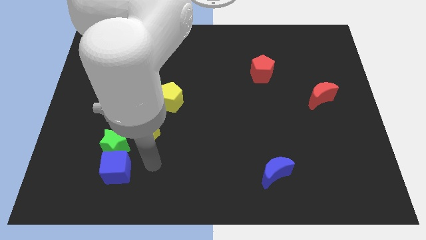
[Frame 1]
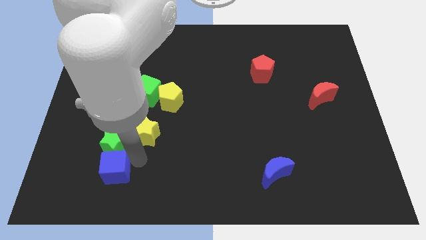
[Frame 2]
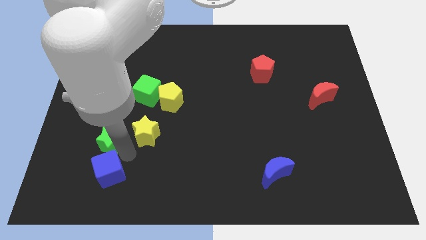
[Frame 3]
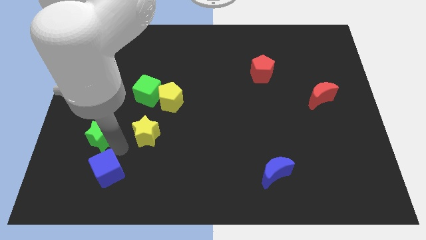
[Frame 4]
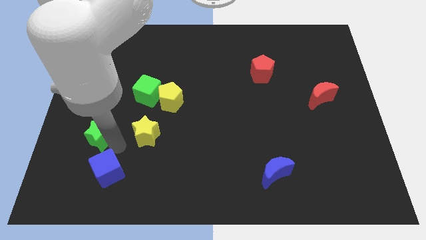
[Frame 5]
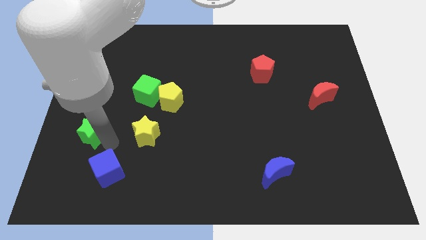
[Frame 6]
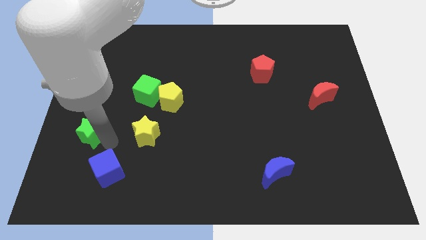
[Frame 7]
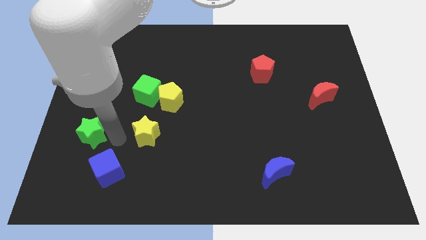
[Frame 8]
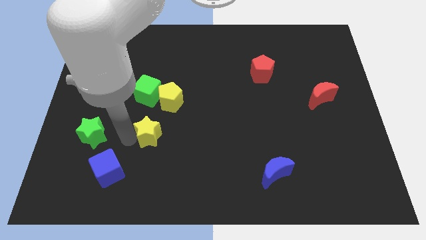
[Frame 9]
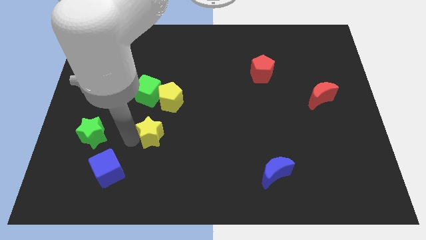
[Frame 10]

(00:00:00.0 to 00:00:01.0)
seperate green star and blue cube

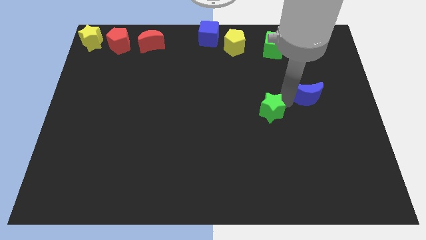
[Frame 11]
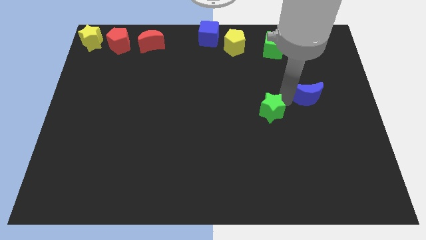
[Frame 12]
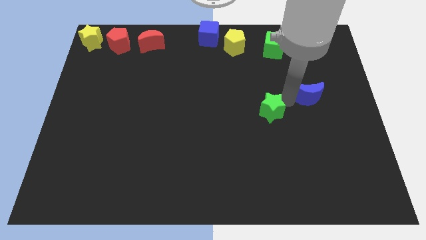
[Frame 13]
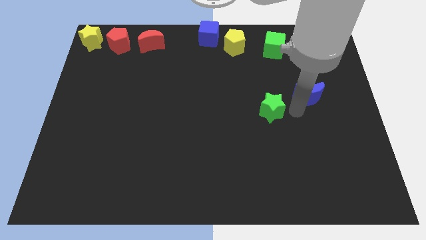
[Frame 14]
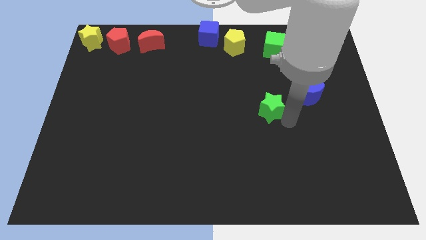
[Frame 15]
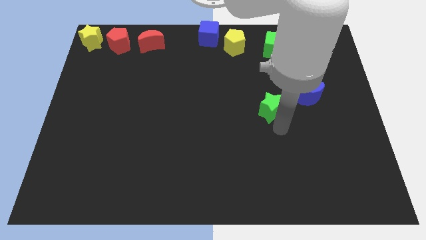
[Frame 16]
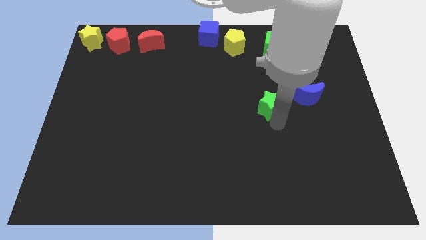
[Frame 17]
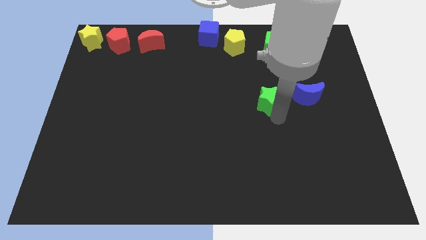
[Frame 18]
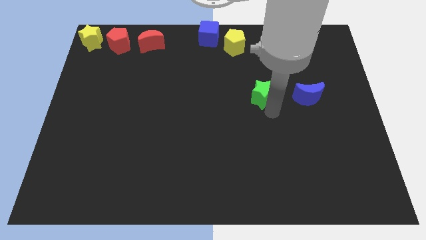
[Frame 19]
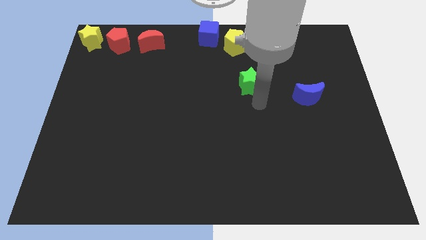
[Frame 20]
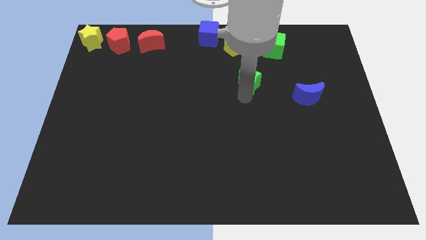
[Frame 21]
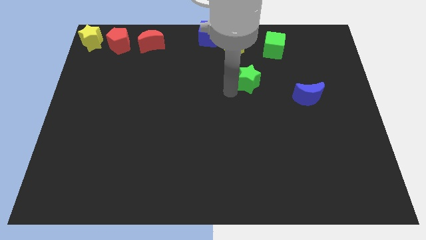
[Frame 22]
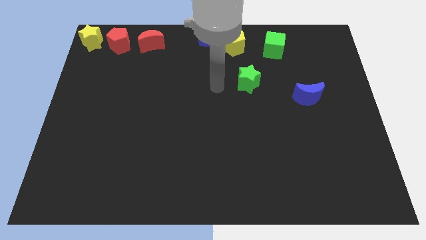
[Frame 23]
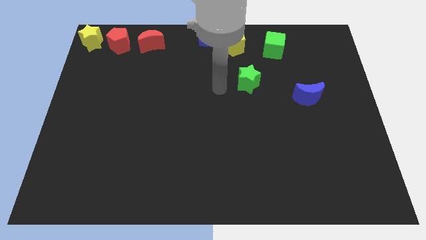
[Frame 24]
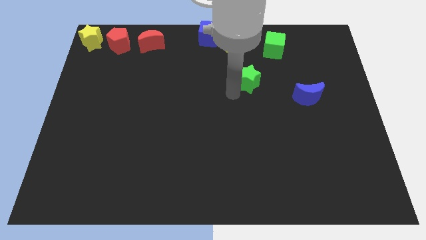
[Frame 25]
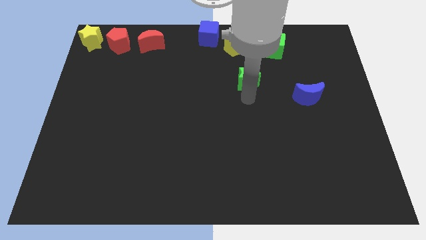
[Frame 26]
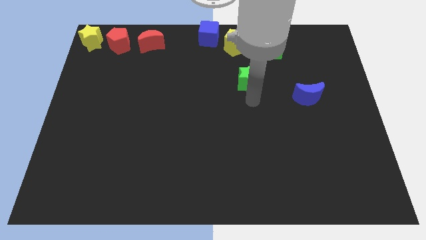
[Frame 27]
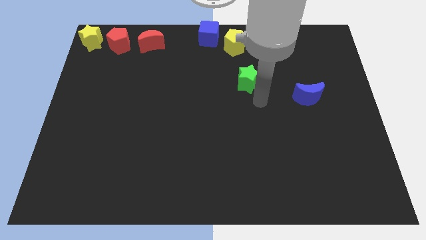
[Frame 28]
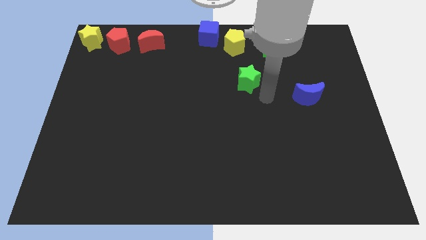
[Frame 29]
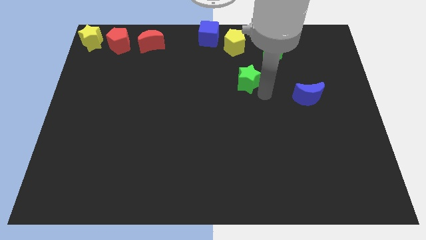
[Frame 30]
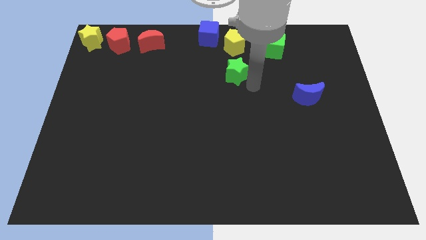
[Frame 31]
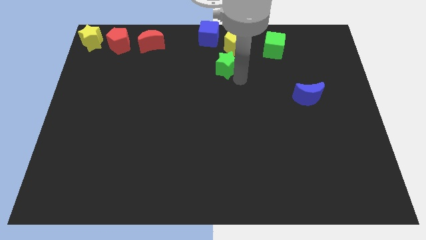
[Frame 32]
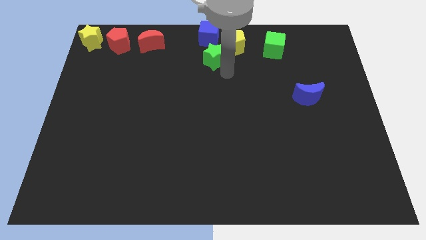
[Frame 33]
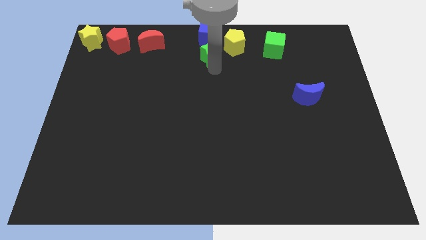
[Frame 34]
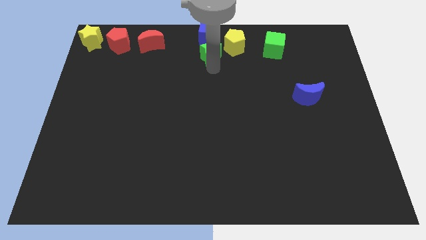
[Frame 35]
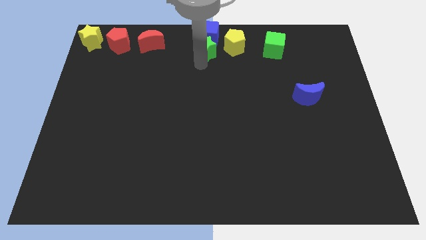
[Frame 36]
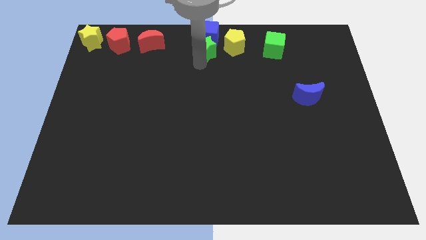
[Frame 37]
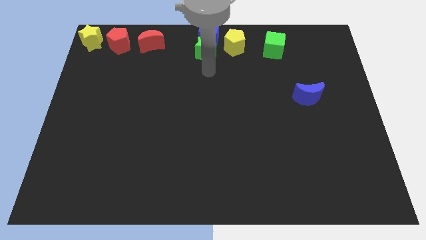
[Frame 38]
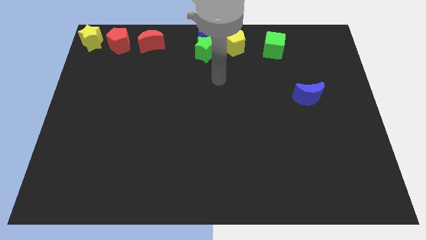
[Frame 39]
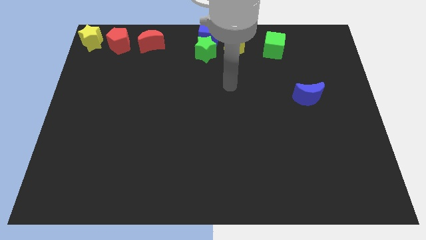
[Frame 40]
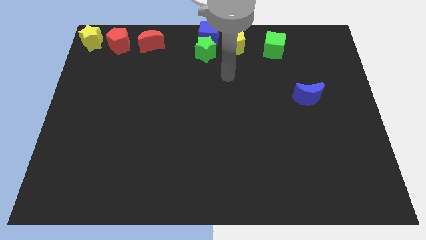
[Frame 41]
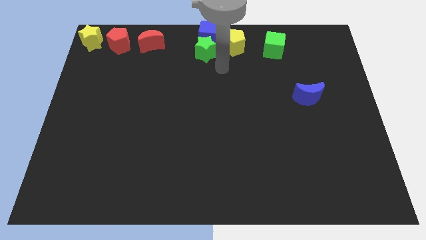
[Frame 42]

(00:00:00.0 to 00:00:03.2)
push the green star to the bottom side of the blue cube

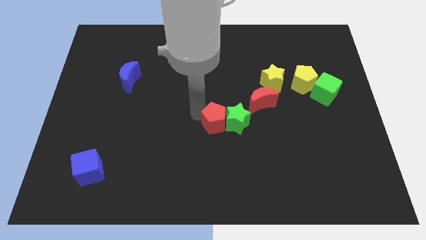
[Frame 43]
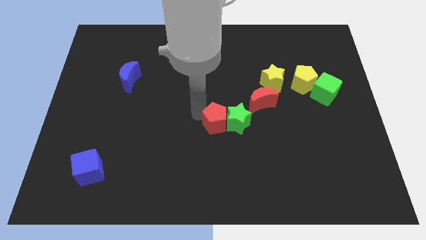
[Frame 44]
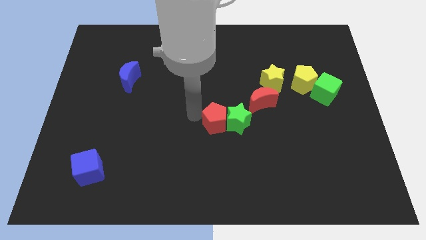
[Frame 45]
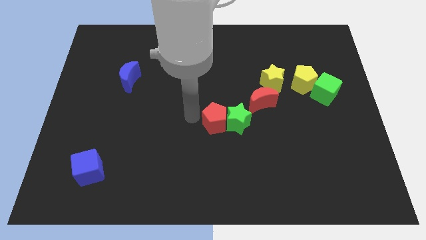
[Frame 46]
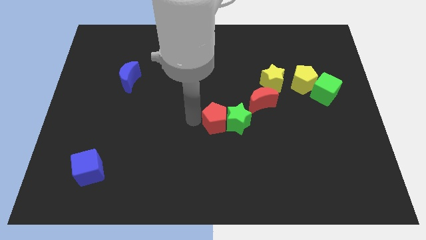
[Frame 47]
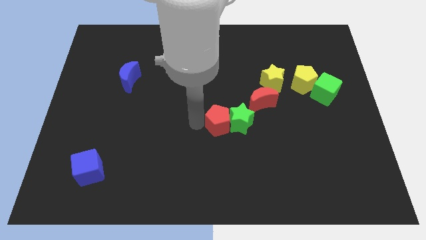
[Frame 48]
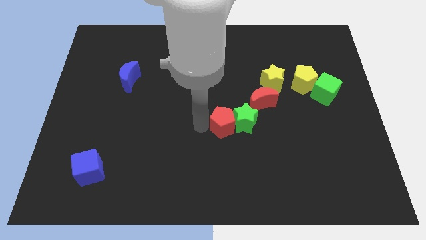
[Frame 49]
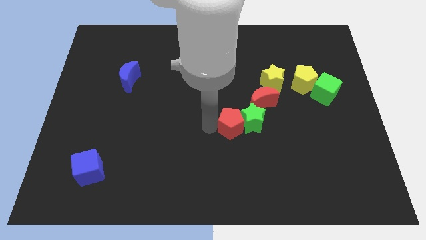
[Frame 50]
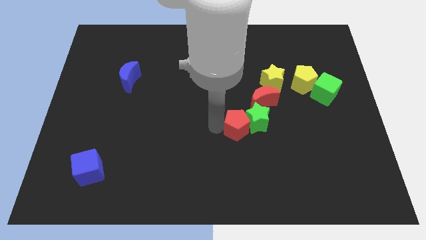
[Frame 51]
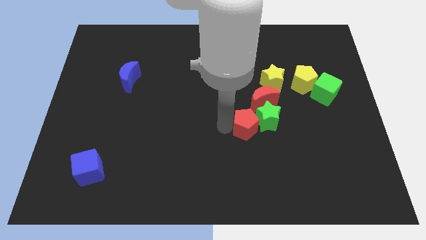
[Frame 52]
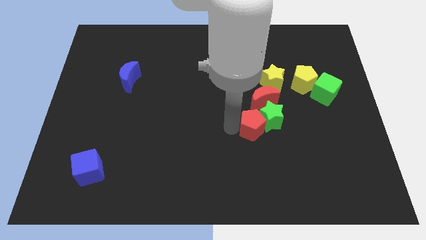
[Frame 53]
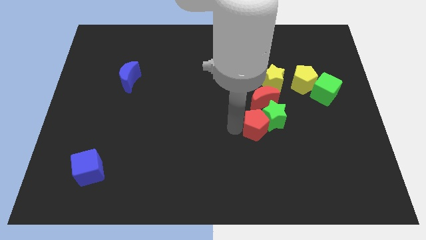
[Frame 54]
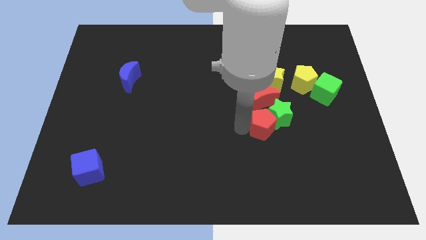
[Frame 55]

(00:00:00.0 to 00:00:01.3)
push the green star and red pentagon at the bottom of red moon

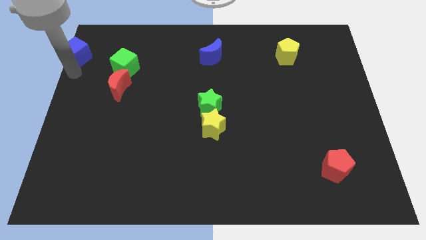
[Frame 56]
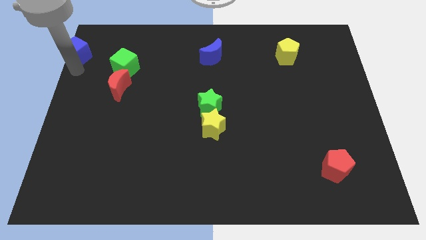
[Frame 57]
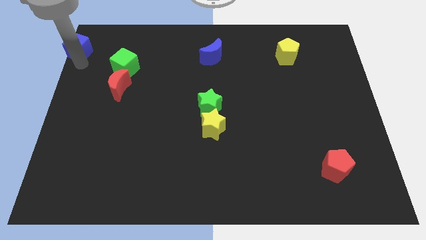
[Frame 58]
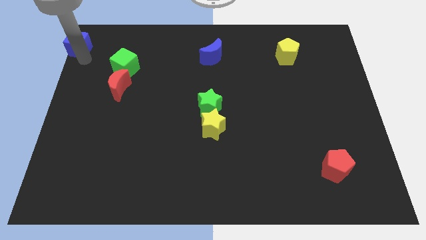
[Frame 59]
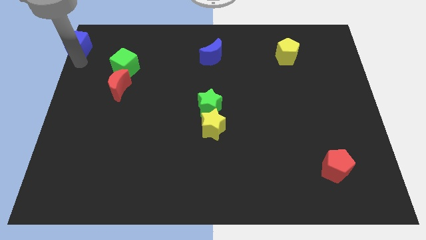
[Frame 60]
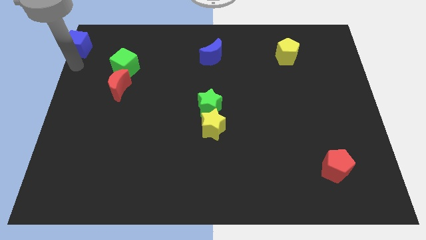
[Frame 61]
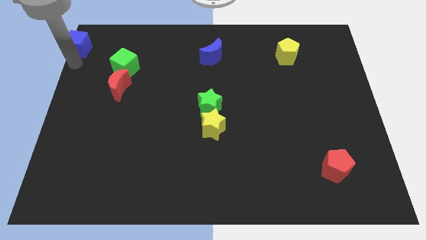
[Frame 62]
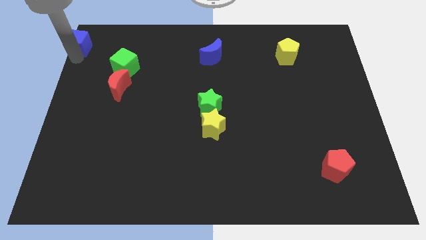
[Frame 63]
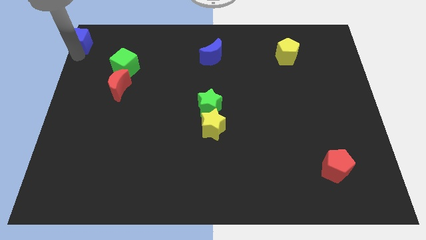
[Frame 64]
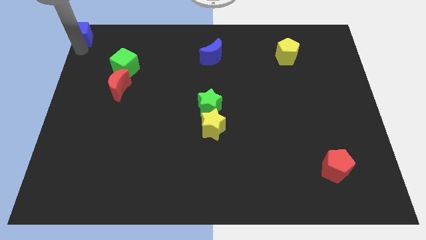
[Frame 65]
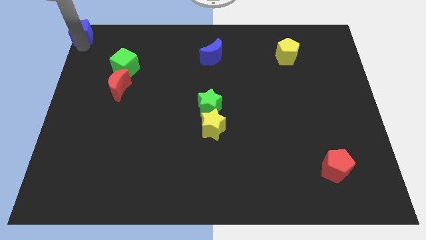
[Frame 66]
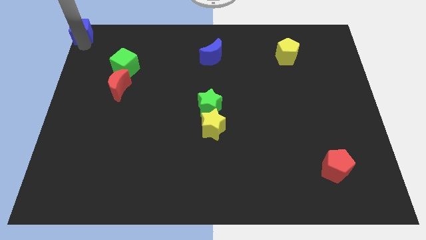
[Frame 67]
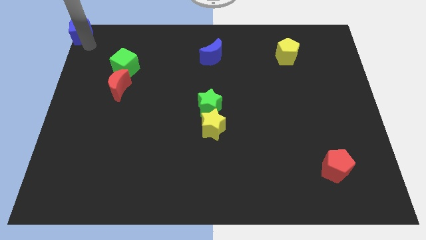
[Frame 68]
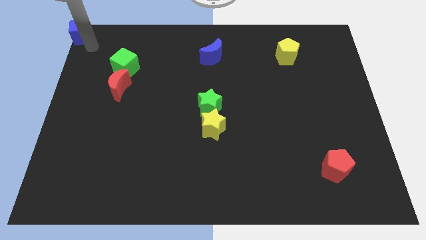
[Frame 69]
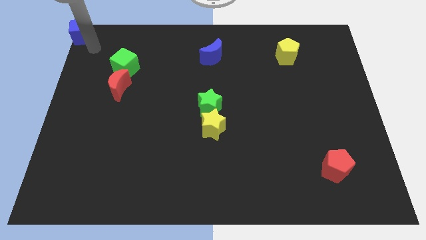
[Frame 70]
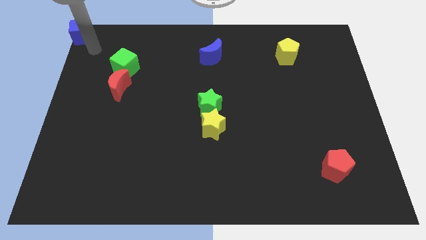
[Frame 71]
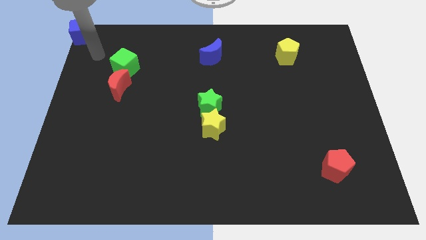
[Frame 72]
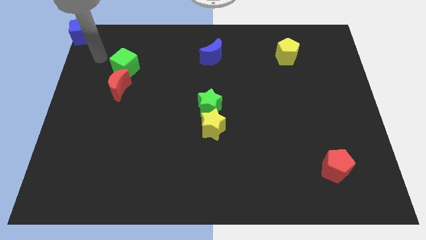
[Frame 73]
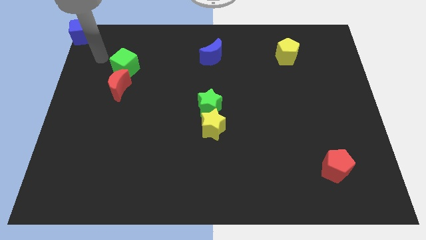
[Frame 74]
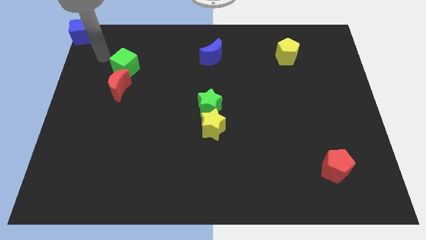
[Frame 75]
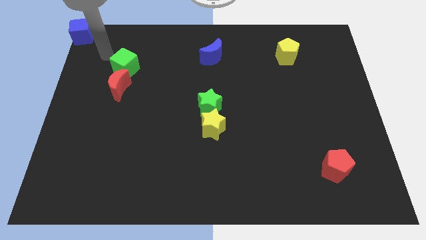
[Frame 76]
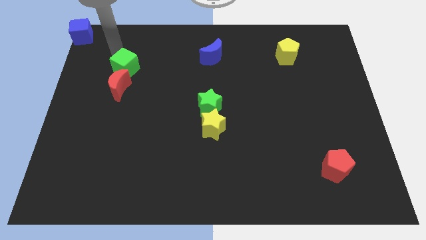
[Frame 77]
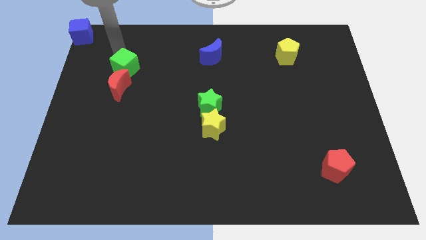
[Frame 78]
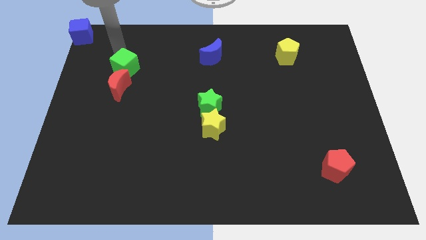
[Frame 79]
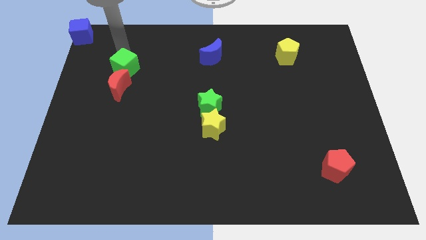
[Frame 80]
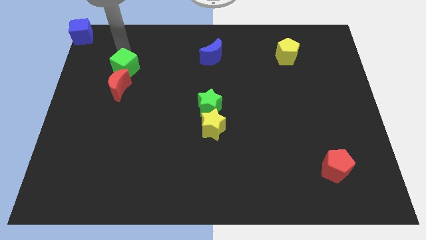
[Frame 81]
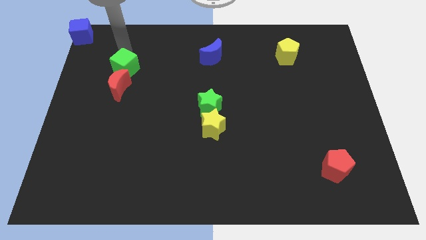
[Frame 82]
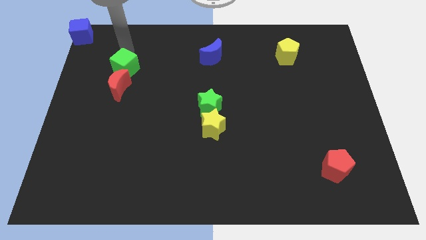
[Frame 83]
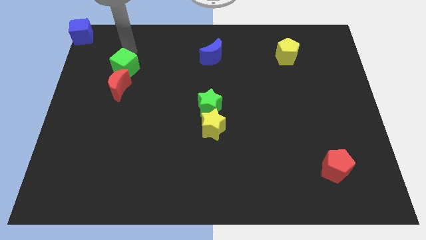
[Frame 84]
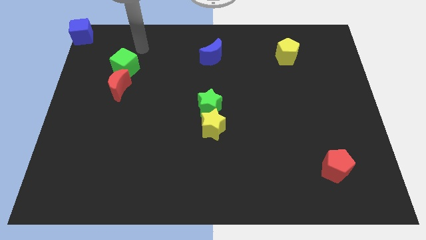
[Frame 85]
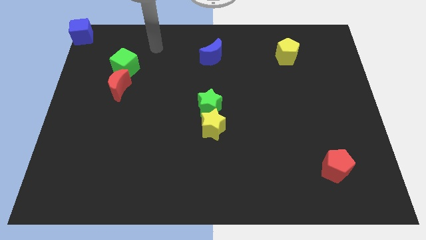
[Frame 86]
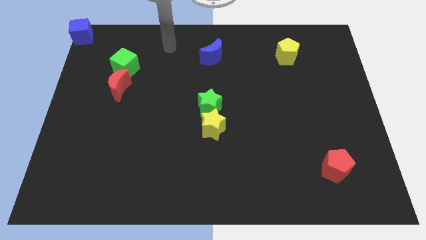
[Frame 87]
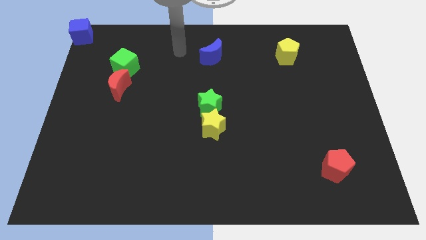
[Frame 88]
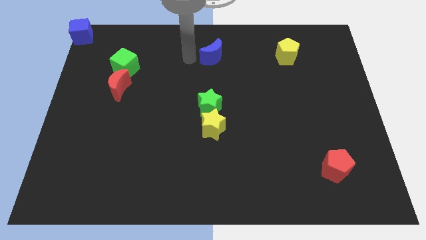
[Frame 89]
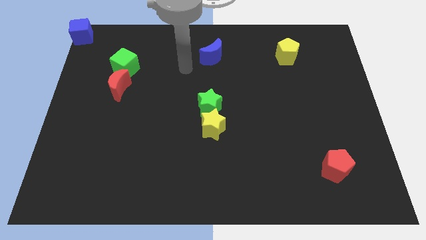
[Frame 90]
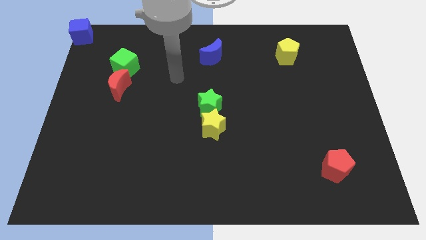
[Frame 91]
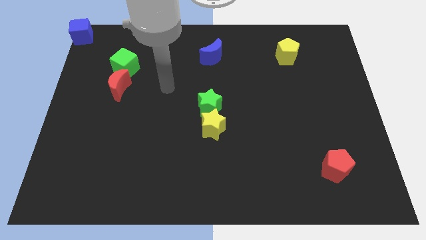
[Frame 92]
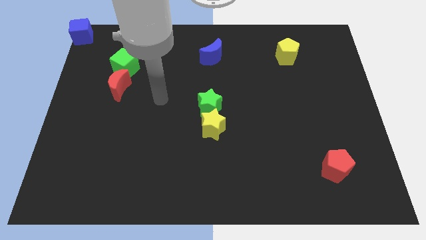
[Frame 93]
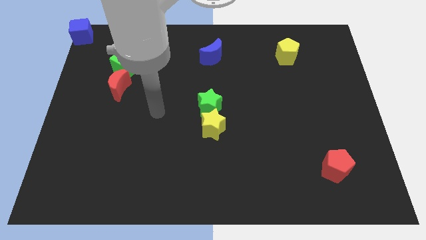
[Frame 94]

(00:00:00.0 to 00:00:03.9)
put the blue cube at the top left corner
